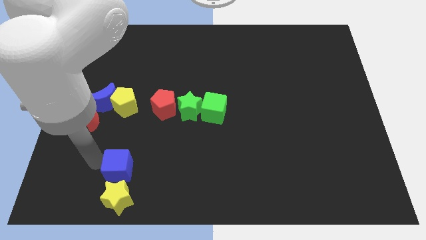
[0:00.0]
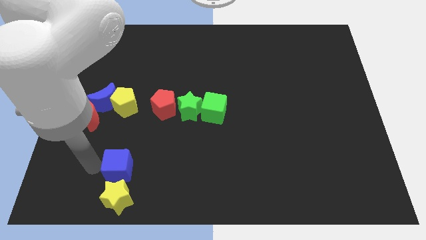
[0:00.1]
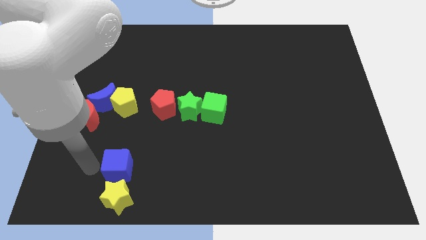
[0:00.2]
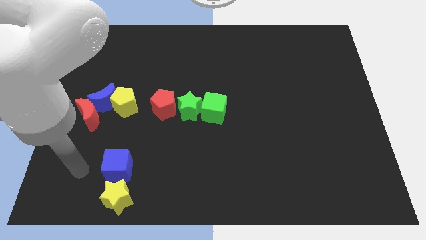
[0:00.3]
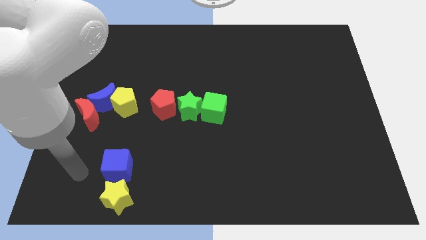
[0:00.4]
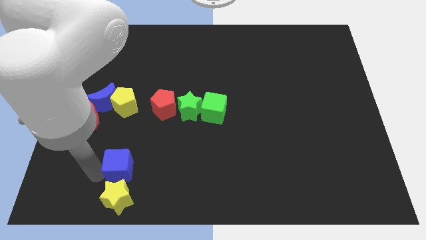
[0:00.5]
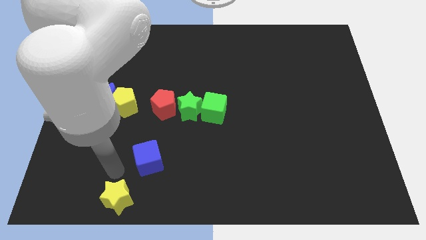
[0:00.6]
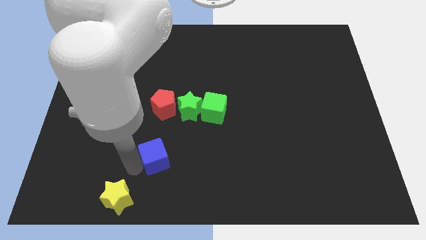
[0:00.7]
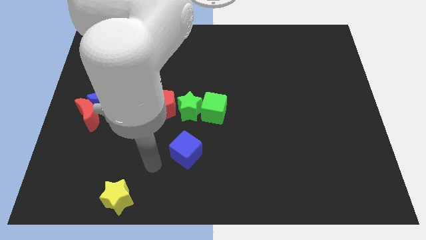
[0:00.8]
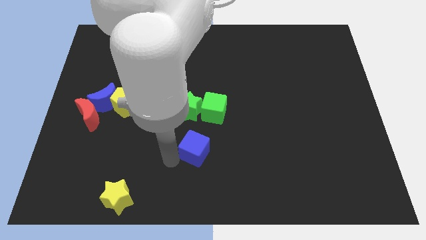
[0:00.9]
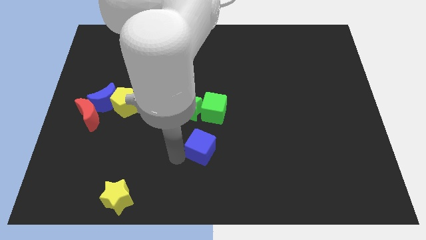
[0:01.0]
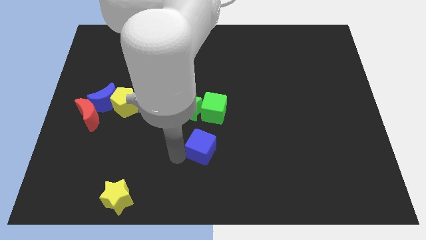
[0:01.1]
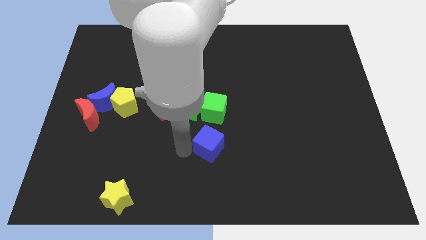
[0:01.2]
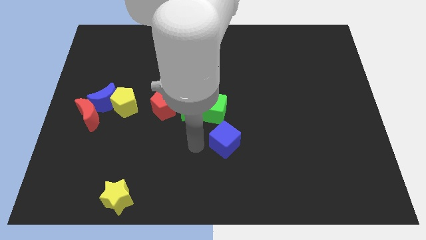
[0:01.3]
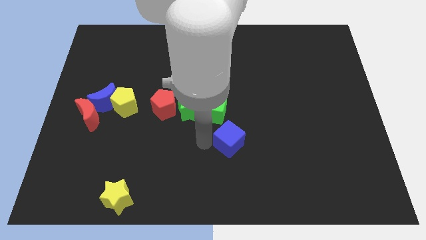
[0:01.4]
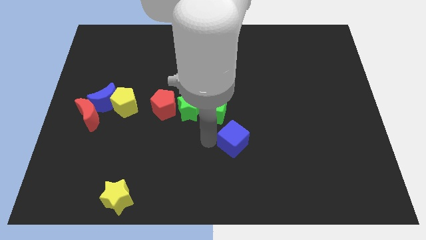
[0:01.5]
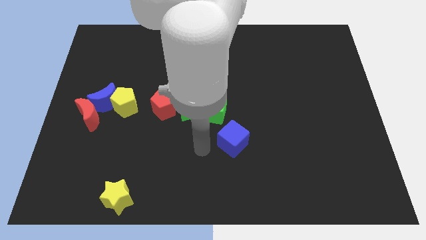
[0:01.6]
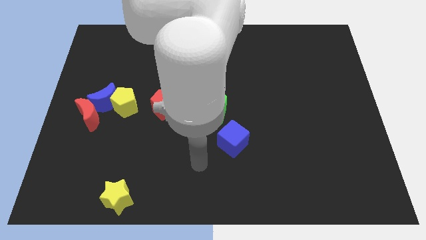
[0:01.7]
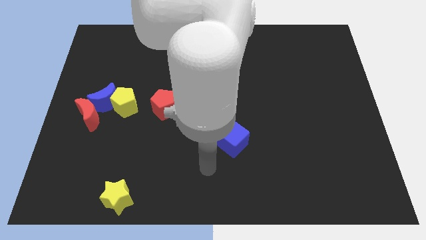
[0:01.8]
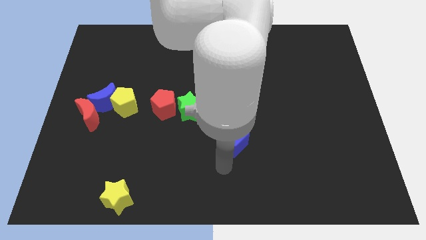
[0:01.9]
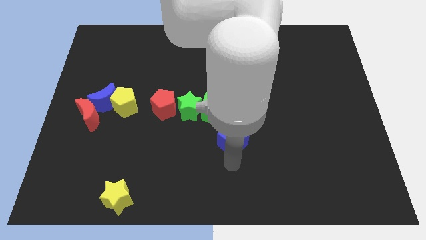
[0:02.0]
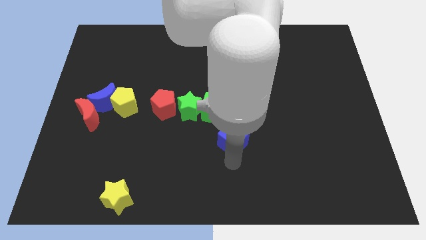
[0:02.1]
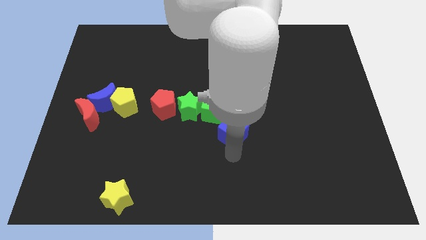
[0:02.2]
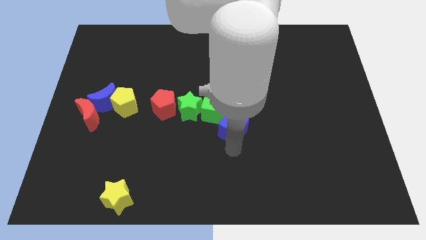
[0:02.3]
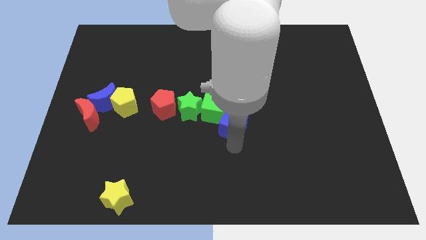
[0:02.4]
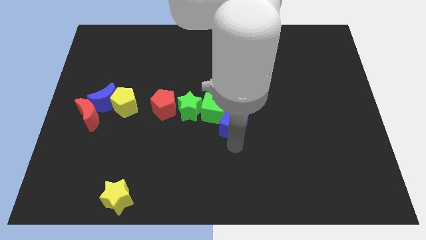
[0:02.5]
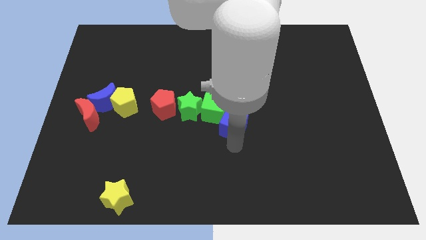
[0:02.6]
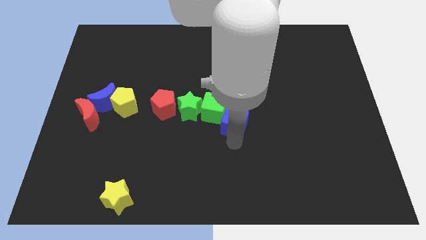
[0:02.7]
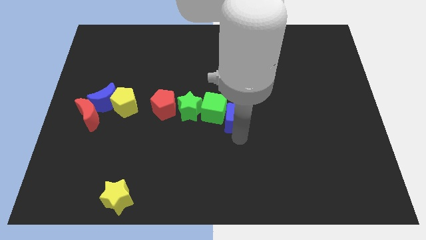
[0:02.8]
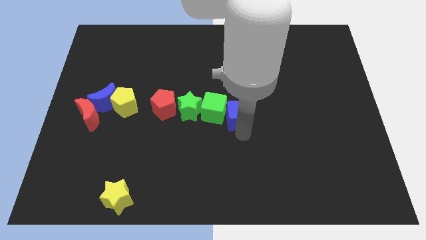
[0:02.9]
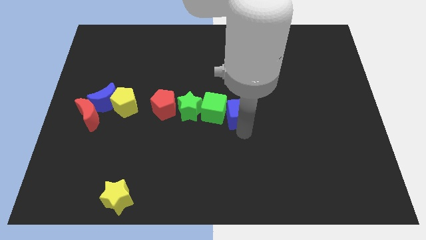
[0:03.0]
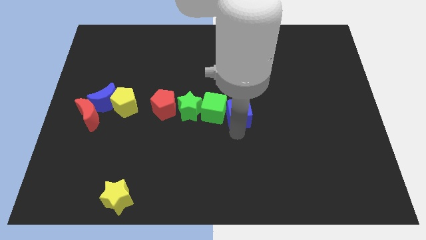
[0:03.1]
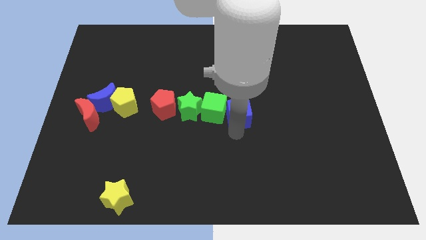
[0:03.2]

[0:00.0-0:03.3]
place the blue cube to the right of the green cube

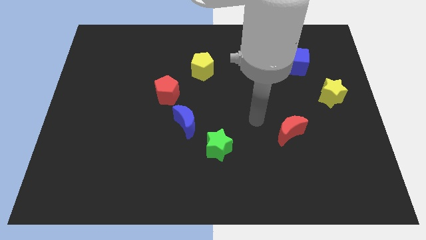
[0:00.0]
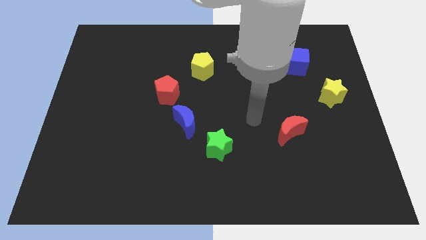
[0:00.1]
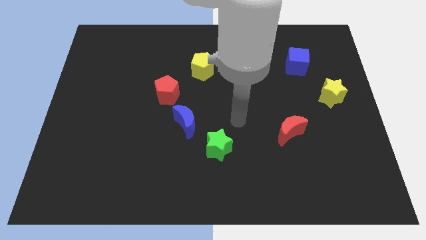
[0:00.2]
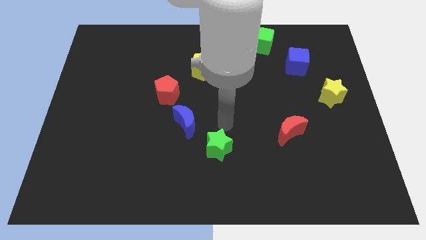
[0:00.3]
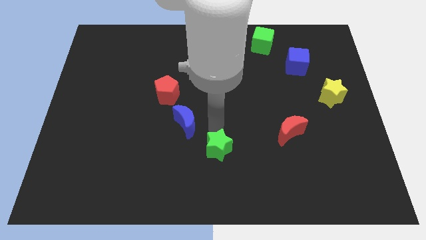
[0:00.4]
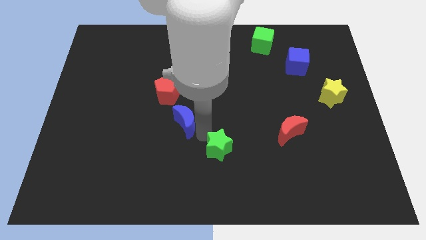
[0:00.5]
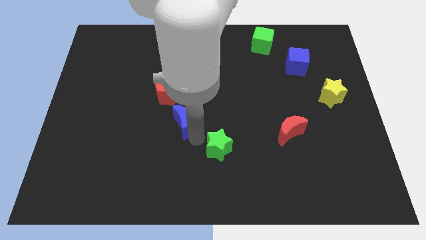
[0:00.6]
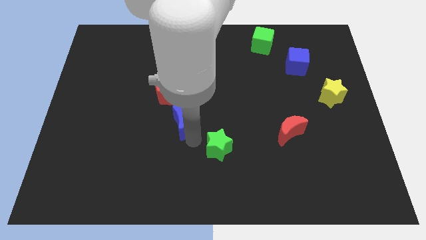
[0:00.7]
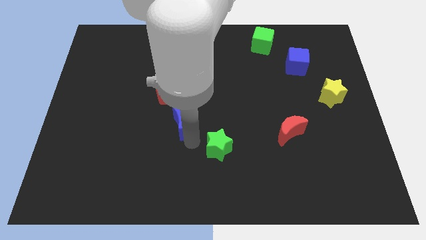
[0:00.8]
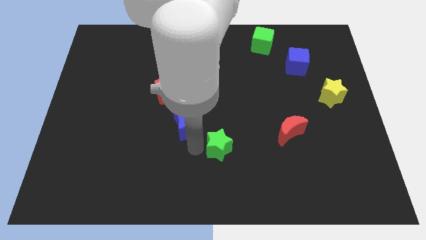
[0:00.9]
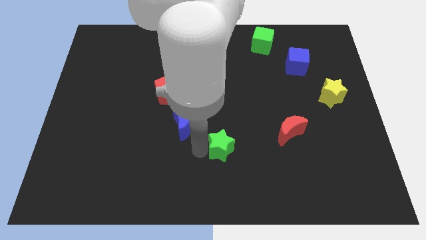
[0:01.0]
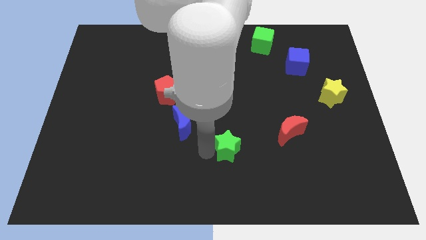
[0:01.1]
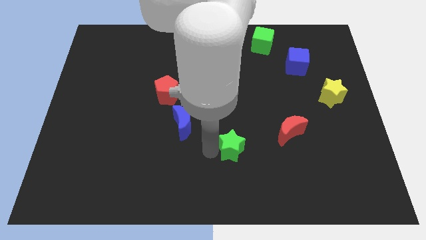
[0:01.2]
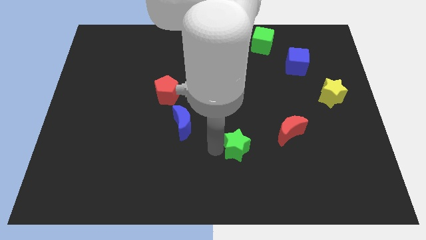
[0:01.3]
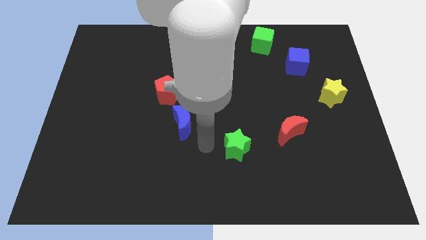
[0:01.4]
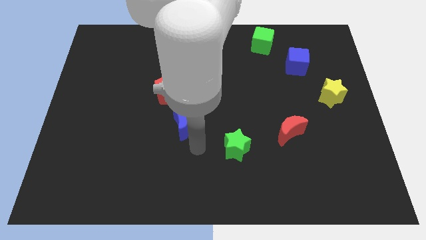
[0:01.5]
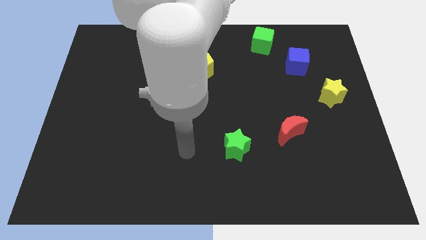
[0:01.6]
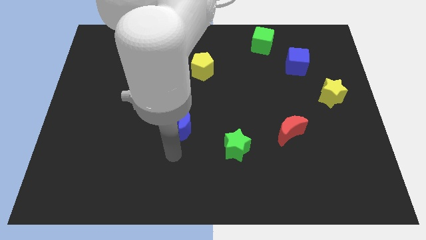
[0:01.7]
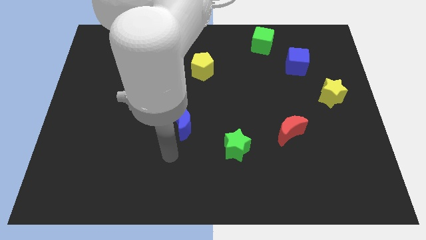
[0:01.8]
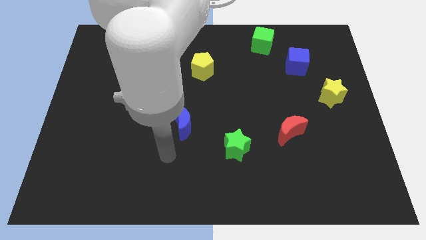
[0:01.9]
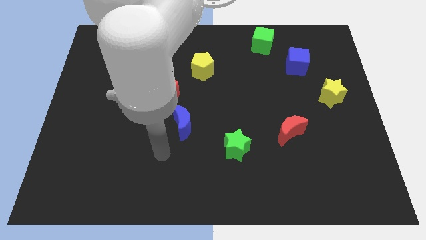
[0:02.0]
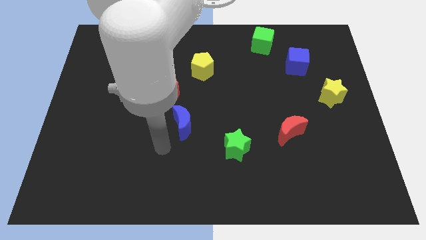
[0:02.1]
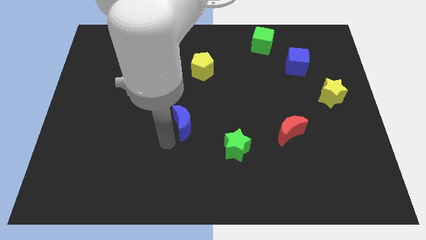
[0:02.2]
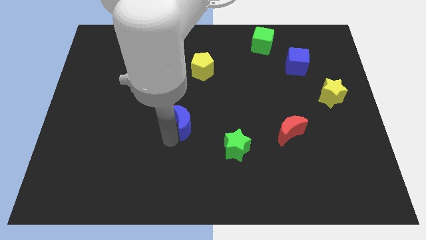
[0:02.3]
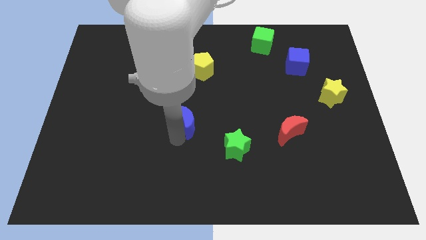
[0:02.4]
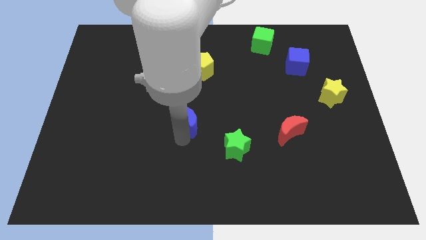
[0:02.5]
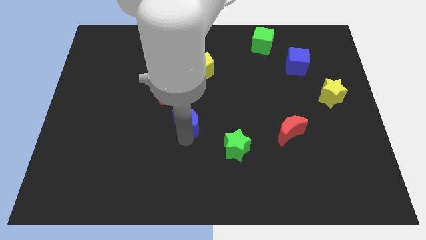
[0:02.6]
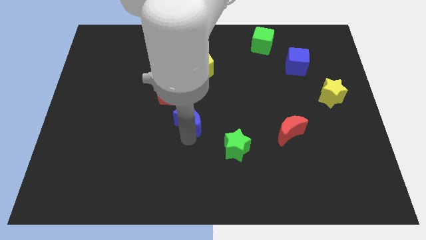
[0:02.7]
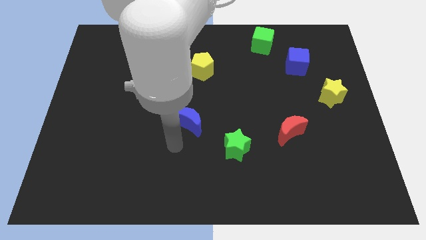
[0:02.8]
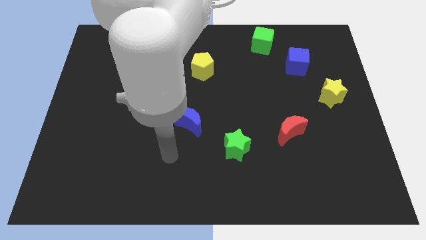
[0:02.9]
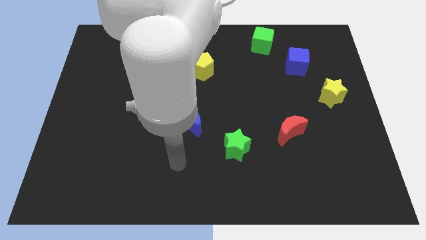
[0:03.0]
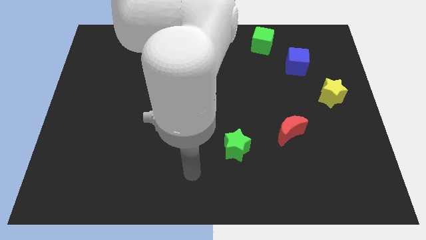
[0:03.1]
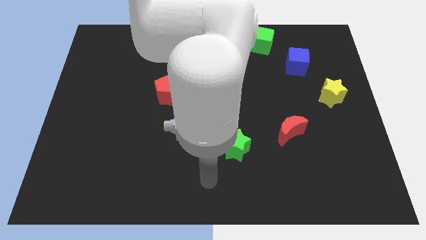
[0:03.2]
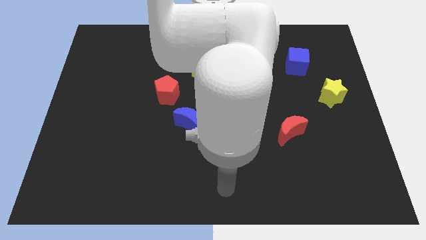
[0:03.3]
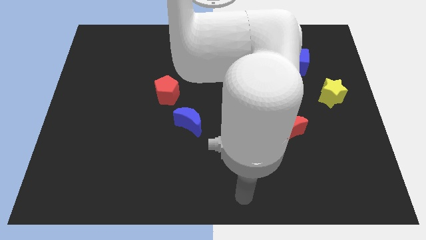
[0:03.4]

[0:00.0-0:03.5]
slightly move the blue moon diagonally to the green star

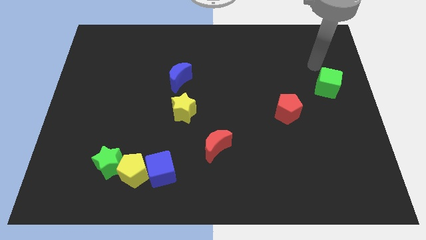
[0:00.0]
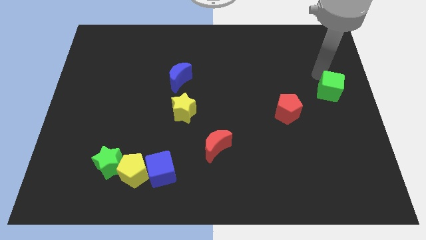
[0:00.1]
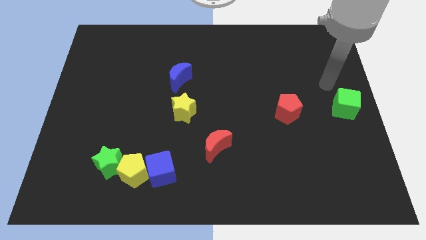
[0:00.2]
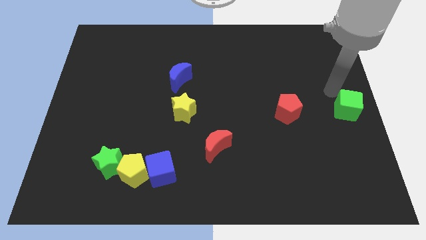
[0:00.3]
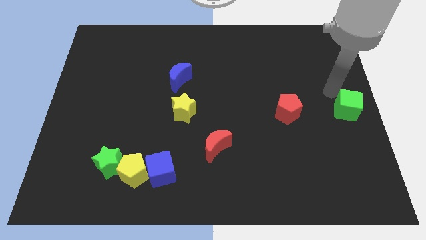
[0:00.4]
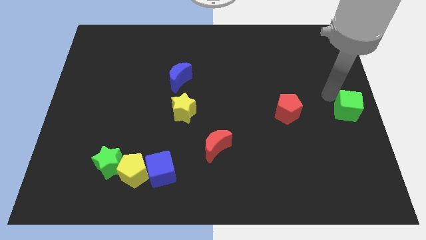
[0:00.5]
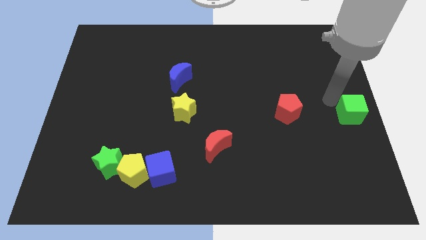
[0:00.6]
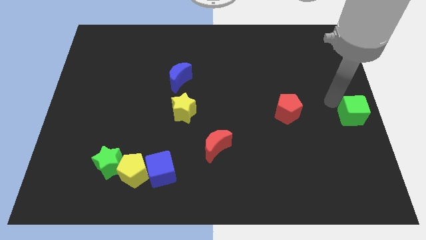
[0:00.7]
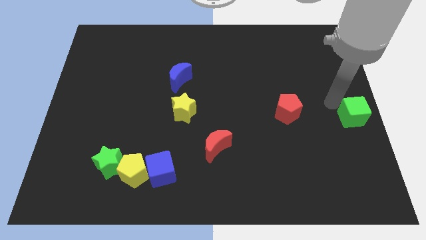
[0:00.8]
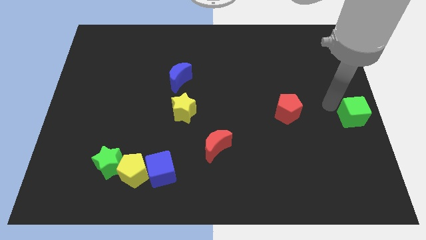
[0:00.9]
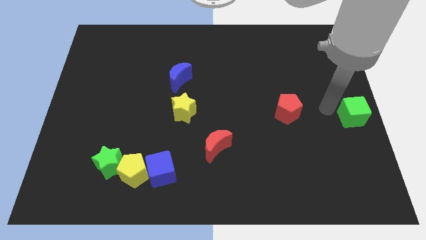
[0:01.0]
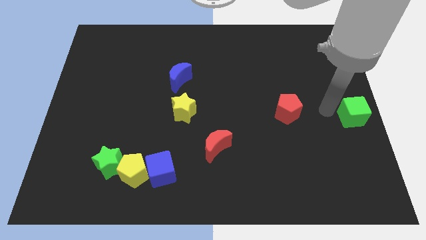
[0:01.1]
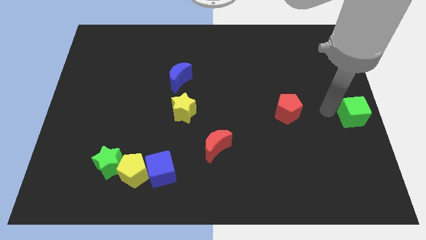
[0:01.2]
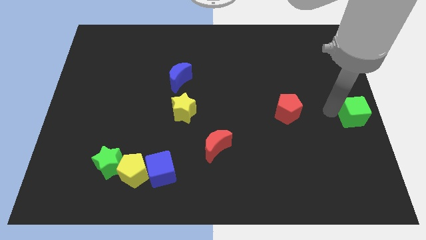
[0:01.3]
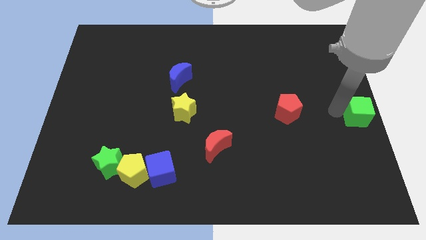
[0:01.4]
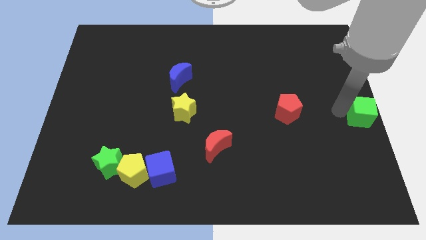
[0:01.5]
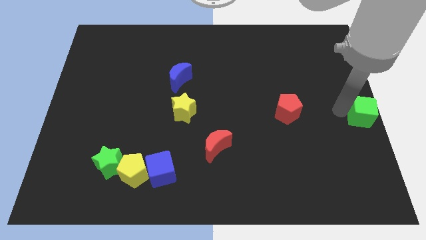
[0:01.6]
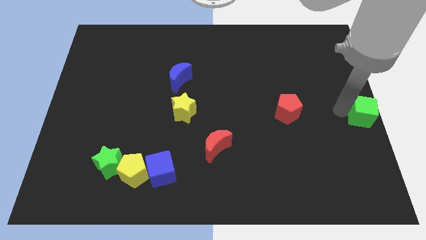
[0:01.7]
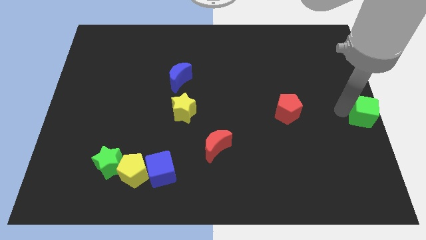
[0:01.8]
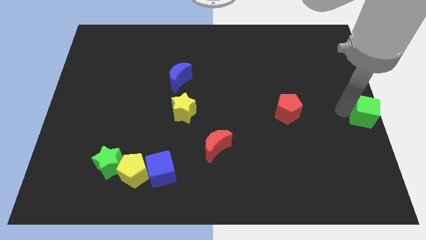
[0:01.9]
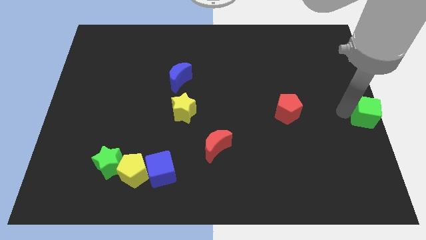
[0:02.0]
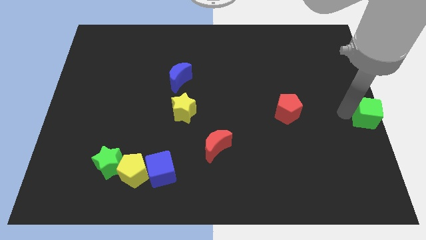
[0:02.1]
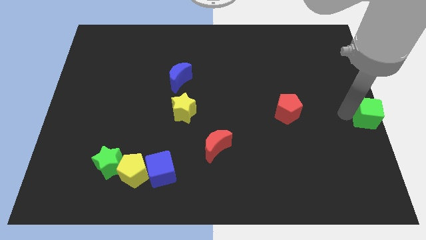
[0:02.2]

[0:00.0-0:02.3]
place the green cube to the right of the red pentagon
